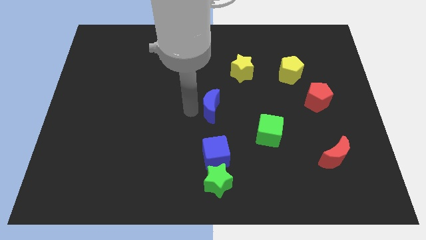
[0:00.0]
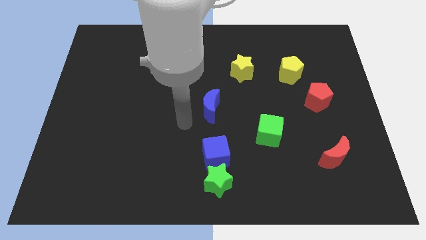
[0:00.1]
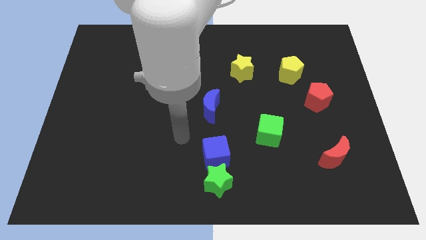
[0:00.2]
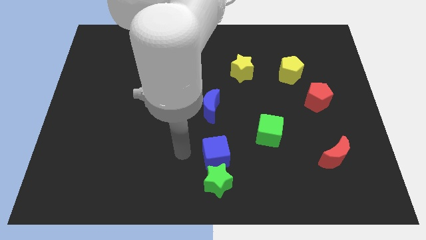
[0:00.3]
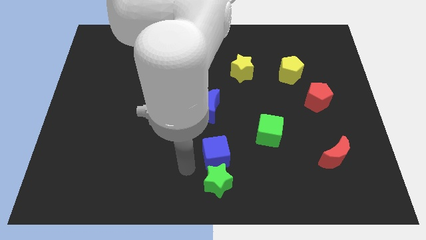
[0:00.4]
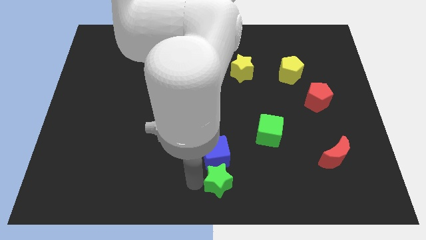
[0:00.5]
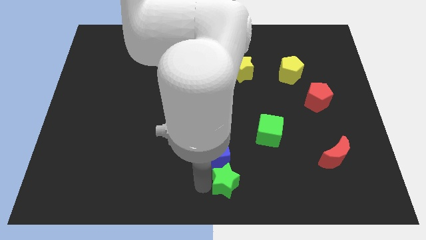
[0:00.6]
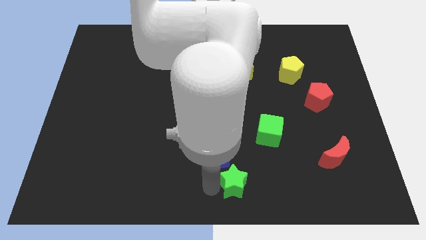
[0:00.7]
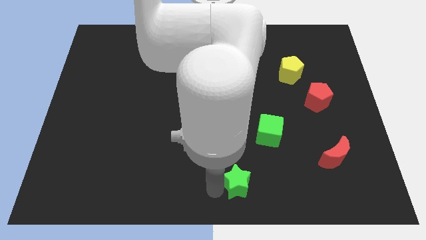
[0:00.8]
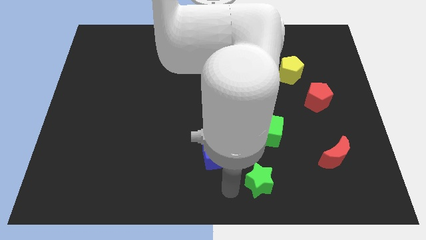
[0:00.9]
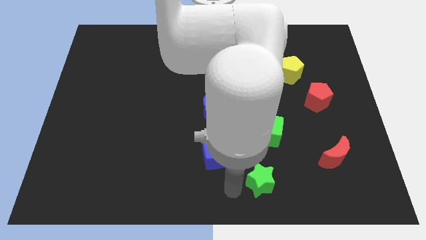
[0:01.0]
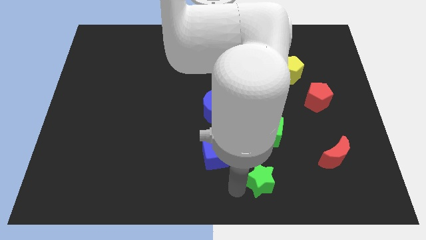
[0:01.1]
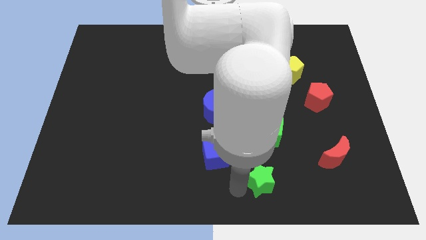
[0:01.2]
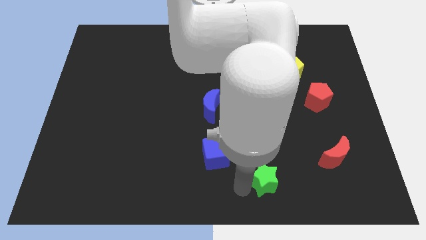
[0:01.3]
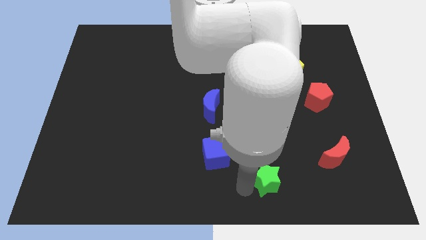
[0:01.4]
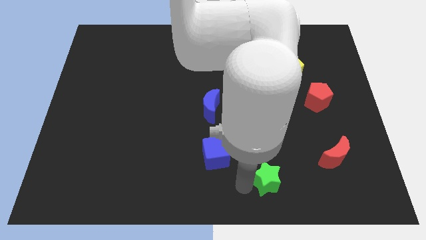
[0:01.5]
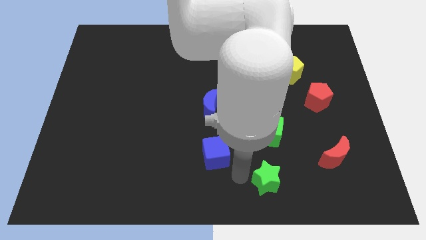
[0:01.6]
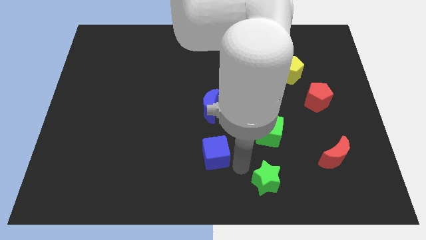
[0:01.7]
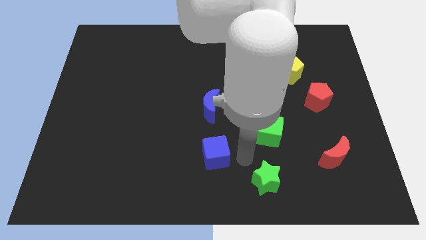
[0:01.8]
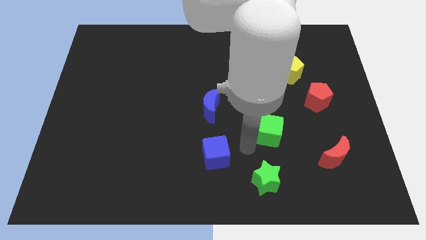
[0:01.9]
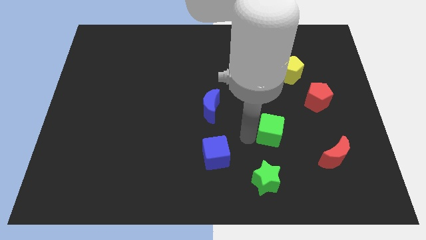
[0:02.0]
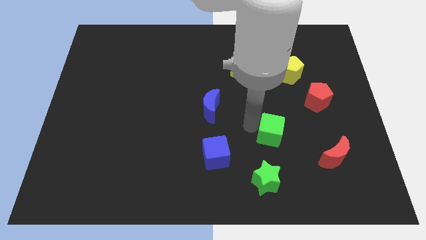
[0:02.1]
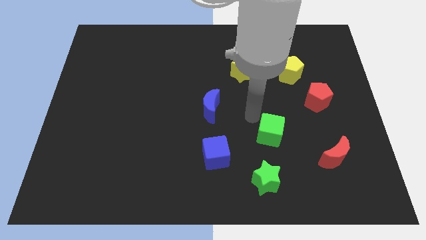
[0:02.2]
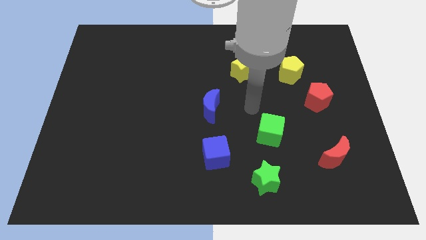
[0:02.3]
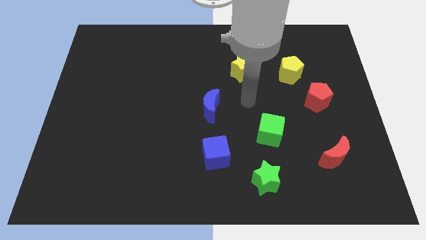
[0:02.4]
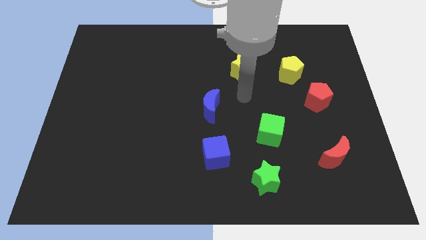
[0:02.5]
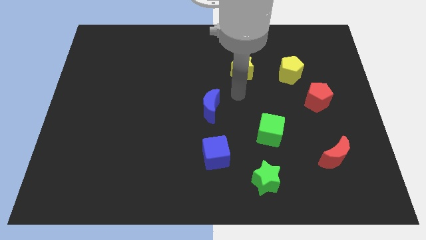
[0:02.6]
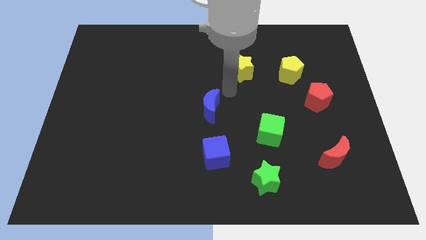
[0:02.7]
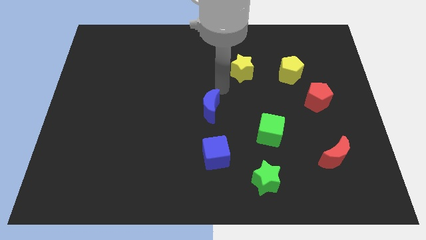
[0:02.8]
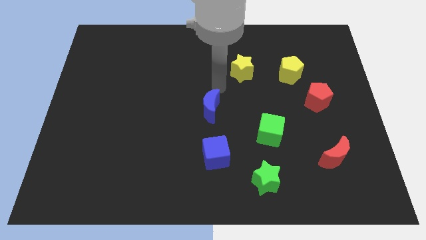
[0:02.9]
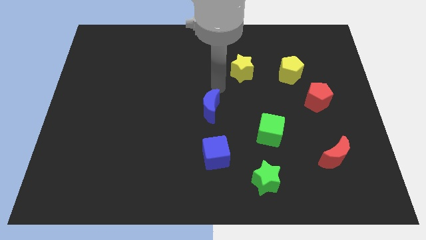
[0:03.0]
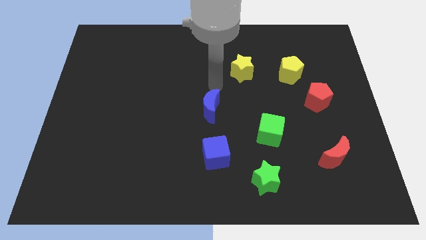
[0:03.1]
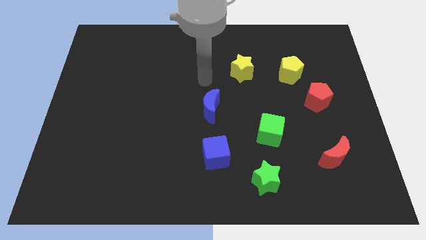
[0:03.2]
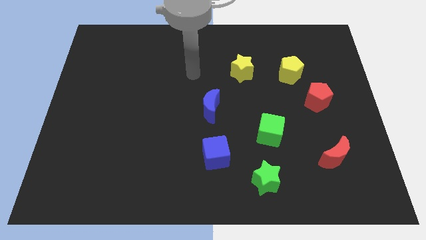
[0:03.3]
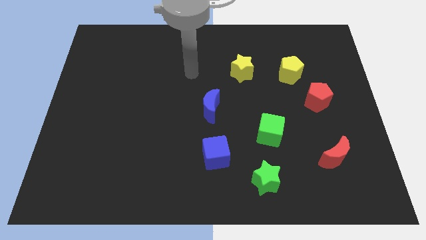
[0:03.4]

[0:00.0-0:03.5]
place green star to the bottom side of the green cube

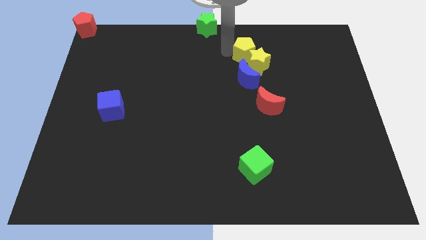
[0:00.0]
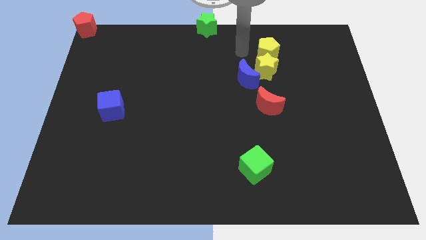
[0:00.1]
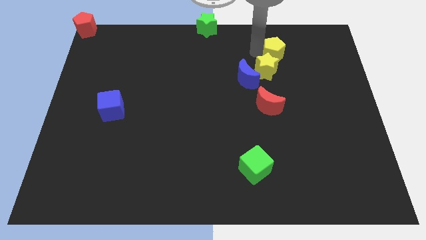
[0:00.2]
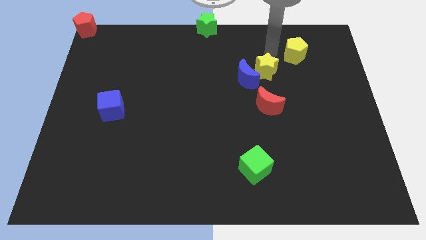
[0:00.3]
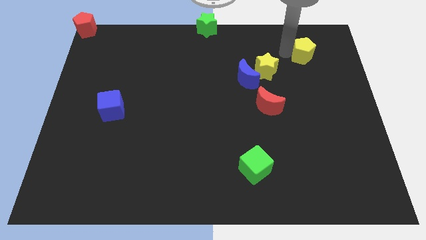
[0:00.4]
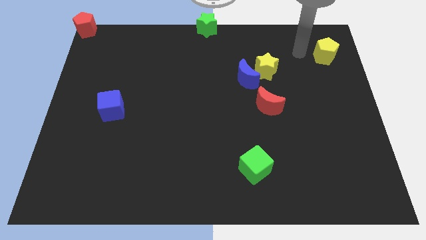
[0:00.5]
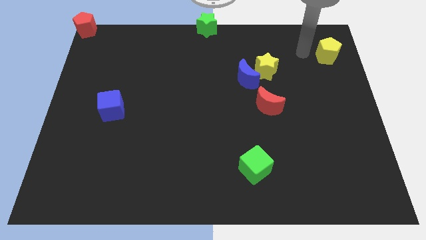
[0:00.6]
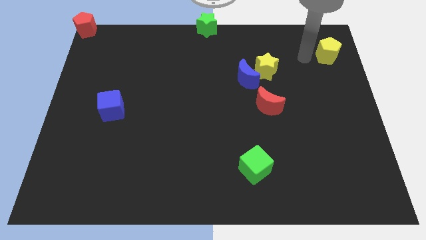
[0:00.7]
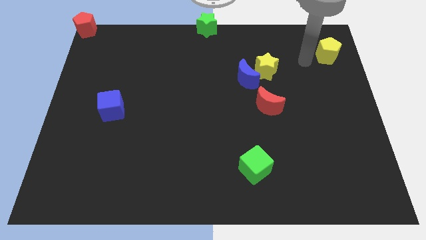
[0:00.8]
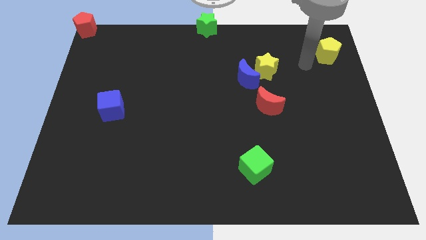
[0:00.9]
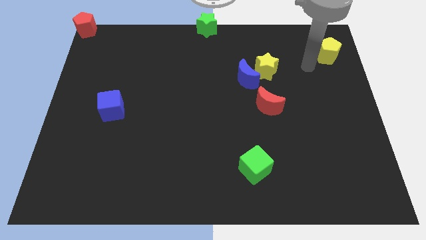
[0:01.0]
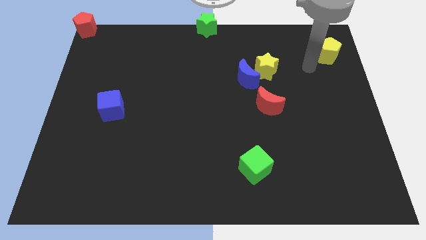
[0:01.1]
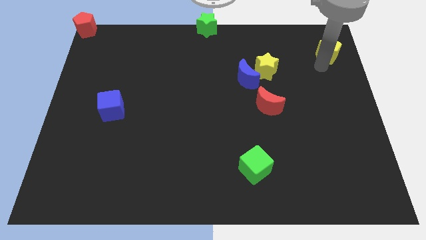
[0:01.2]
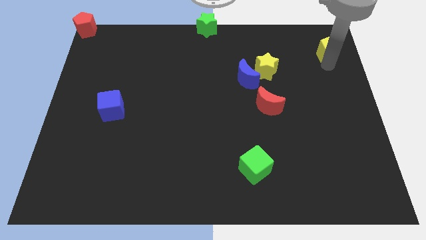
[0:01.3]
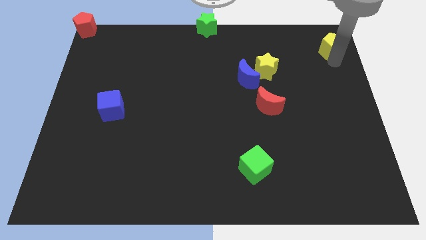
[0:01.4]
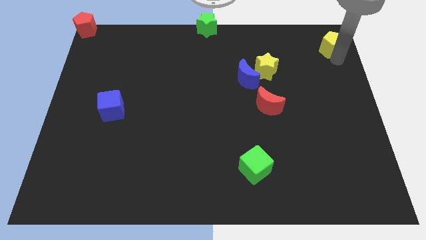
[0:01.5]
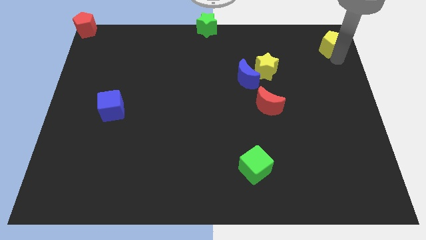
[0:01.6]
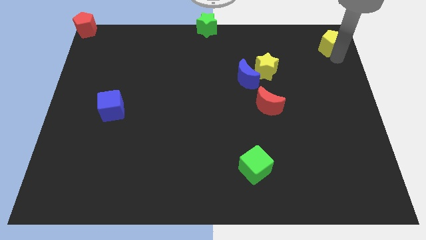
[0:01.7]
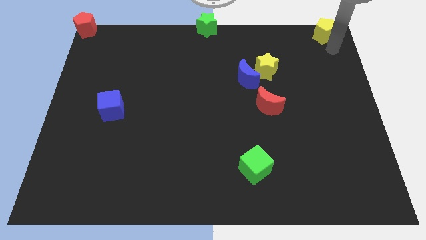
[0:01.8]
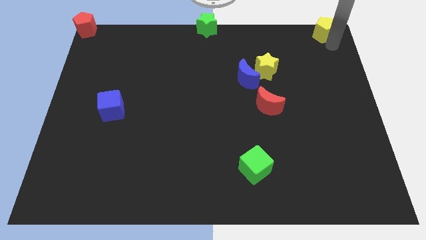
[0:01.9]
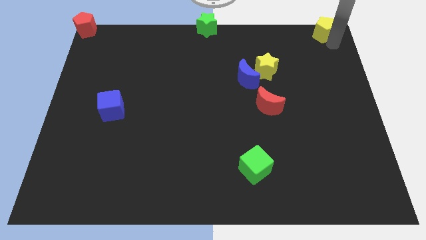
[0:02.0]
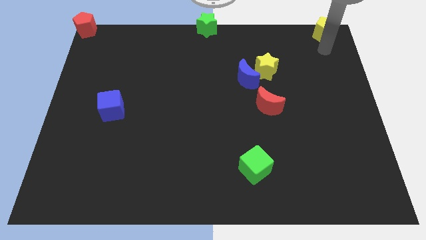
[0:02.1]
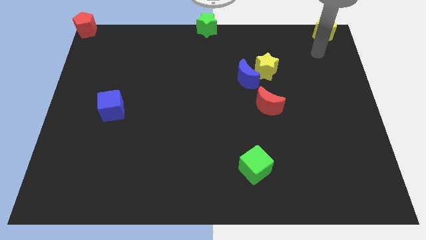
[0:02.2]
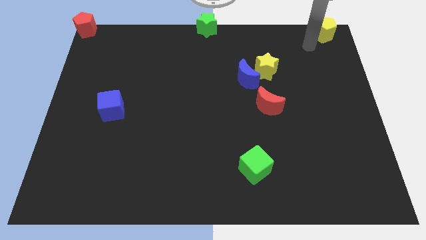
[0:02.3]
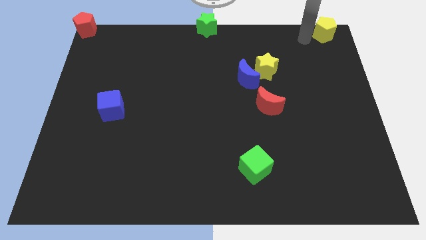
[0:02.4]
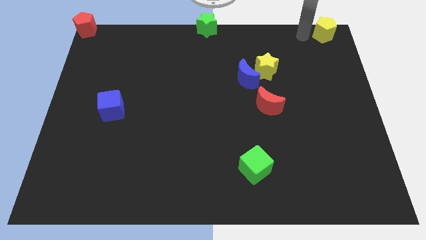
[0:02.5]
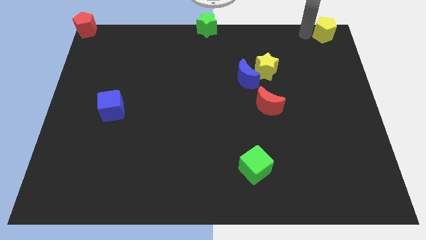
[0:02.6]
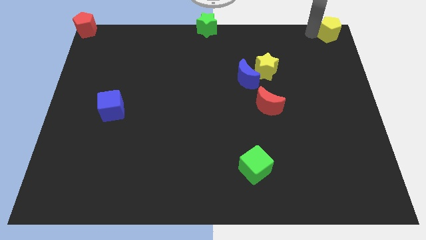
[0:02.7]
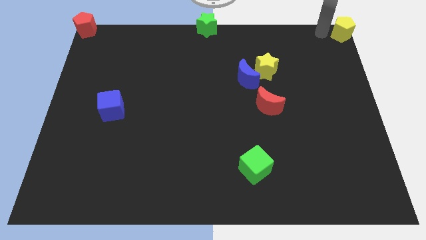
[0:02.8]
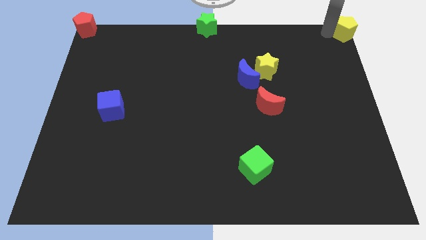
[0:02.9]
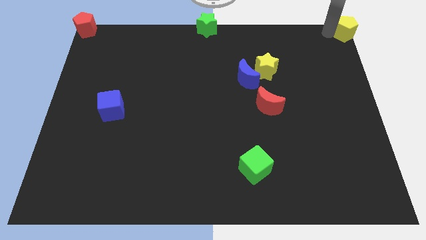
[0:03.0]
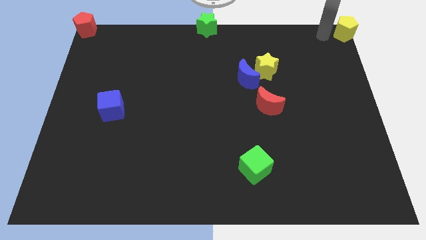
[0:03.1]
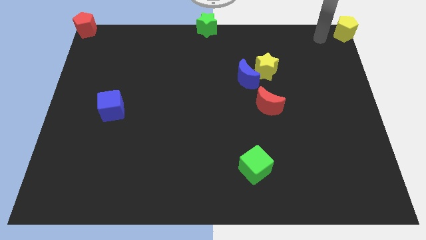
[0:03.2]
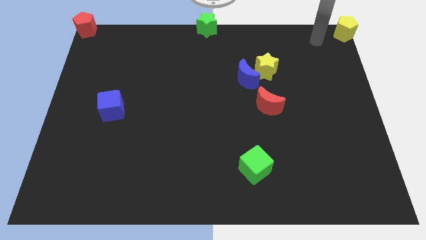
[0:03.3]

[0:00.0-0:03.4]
place the yellow pentagon at the top right corner of the board

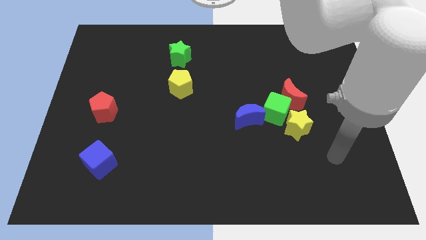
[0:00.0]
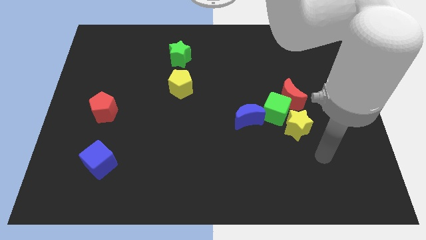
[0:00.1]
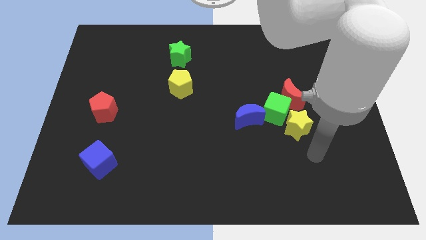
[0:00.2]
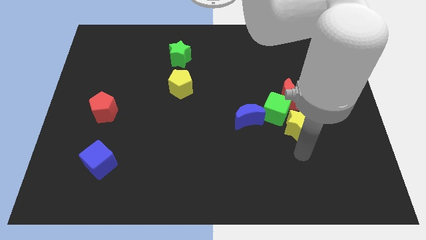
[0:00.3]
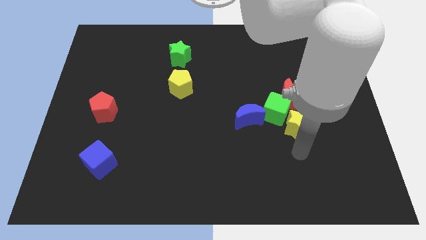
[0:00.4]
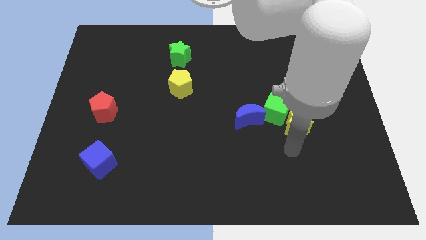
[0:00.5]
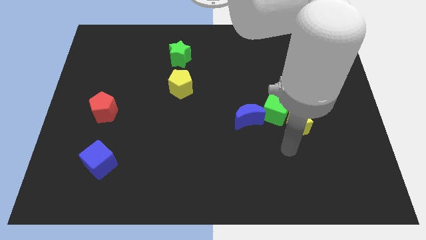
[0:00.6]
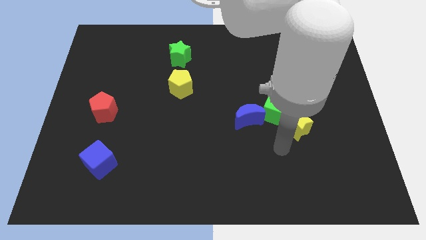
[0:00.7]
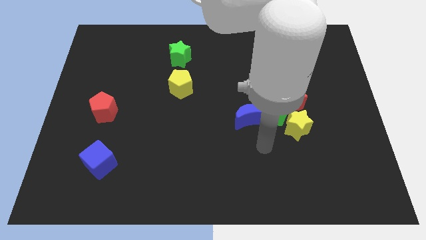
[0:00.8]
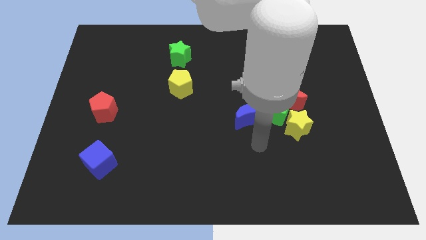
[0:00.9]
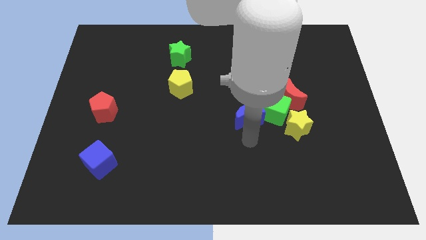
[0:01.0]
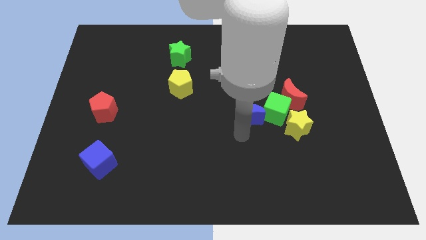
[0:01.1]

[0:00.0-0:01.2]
move the arm towards the blue crescent

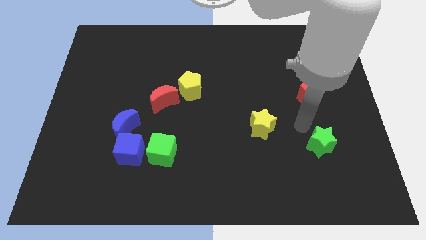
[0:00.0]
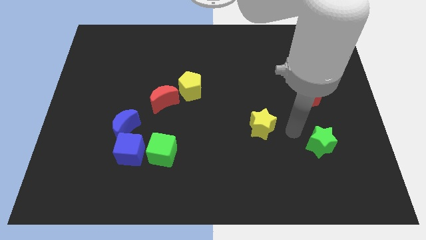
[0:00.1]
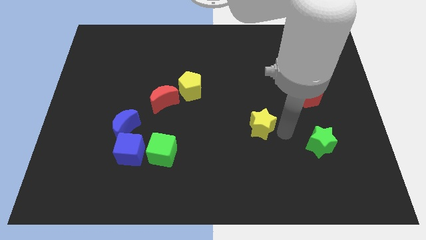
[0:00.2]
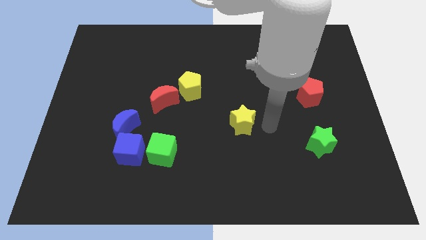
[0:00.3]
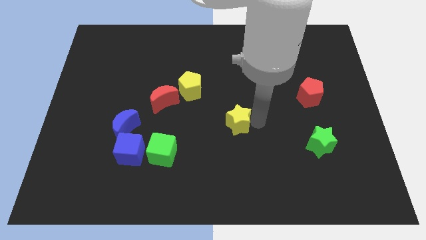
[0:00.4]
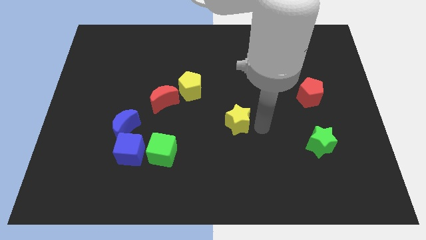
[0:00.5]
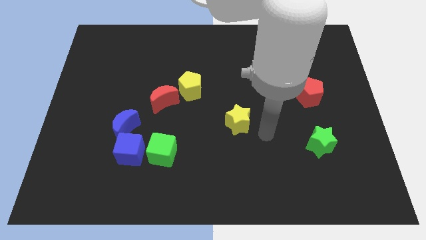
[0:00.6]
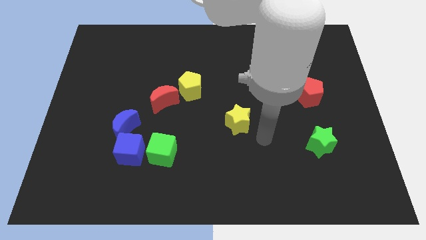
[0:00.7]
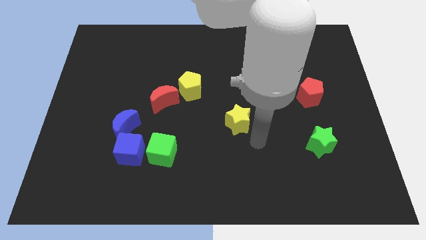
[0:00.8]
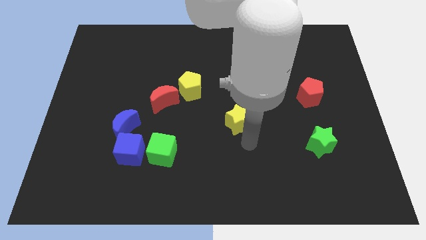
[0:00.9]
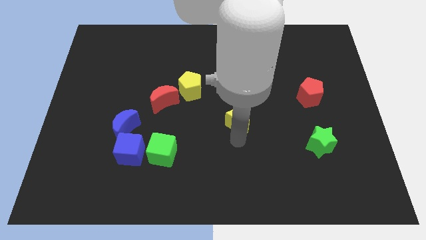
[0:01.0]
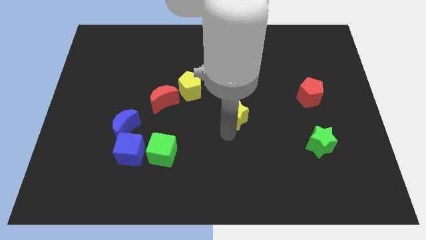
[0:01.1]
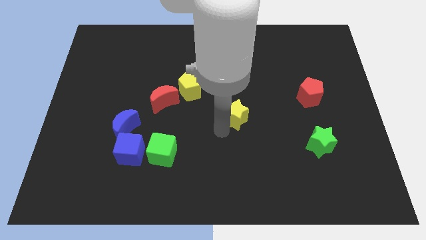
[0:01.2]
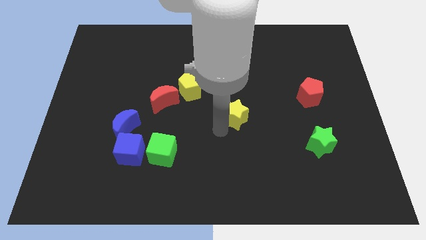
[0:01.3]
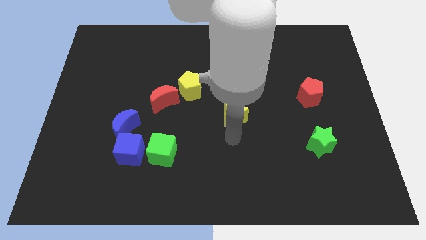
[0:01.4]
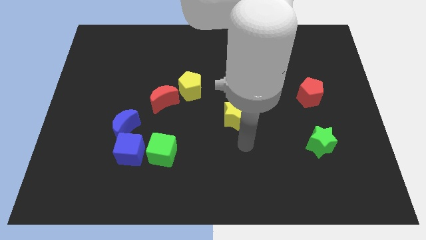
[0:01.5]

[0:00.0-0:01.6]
move the yellow star towards the center of the board
